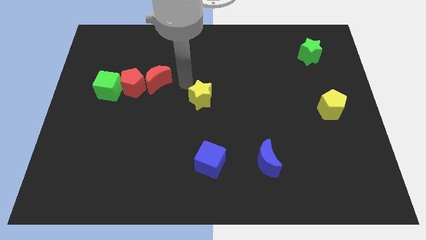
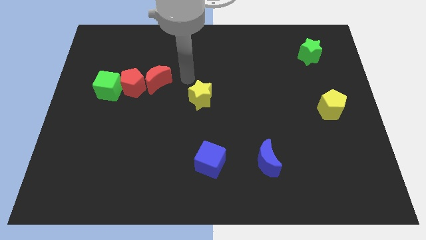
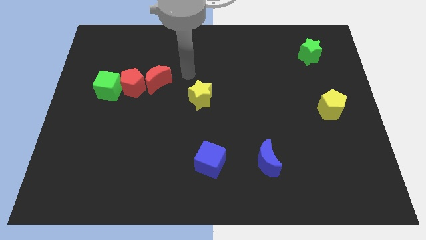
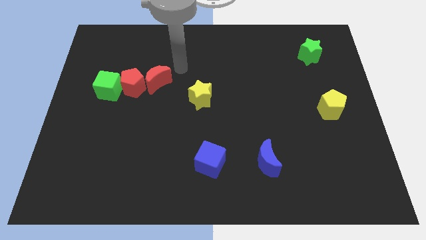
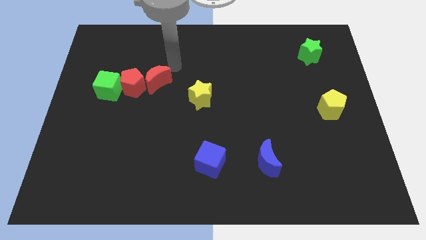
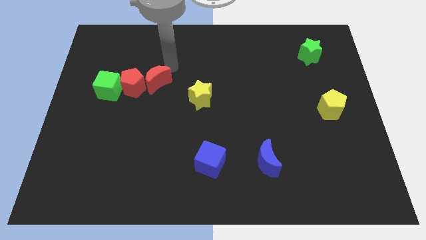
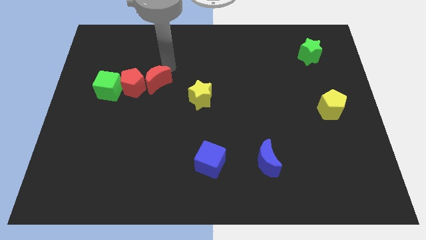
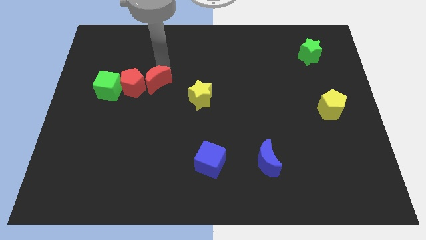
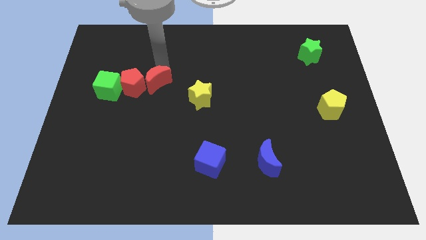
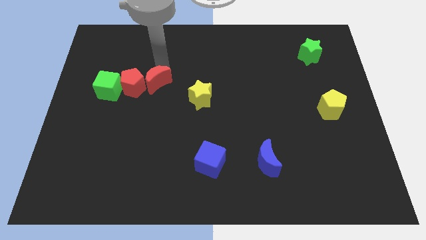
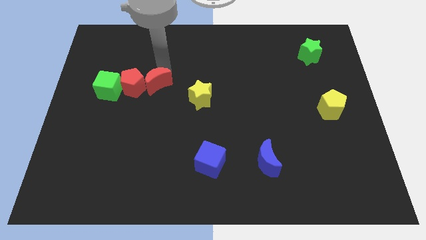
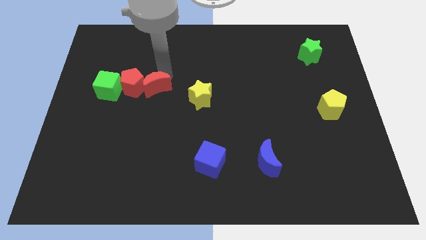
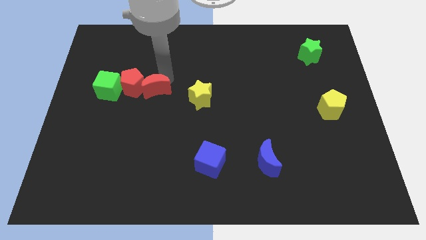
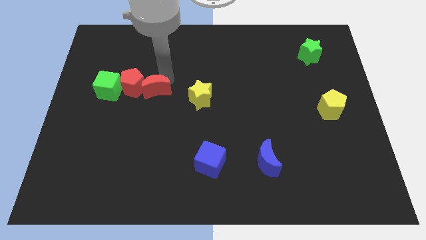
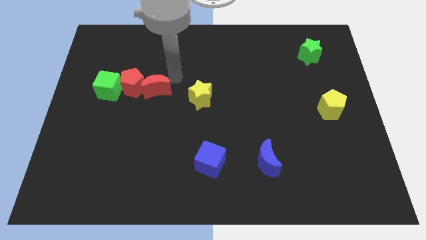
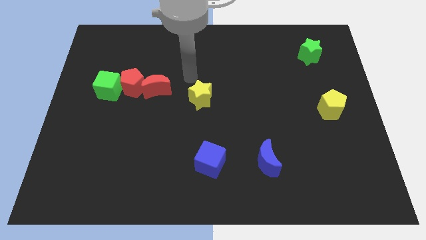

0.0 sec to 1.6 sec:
slightly push the red moon to the down

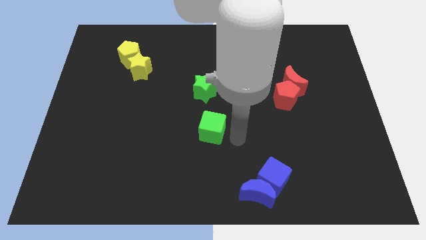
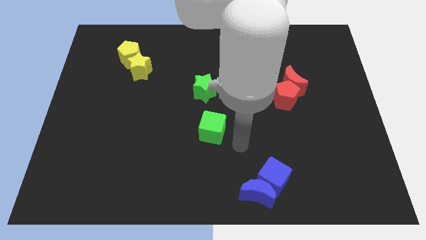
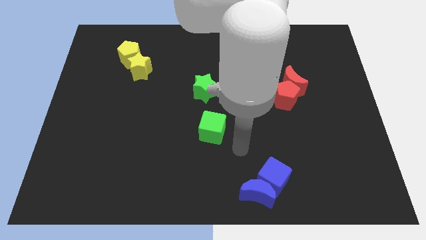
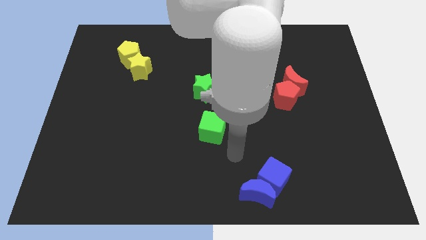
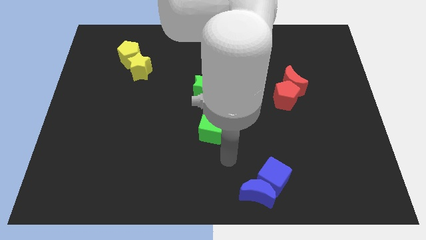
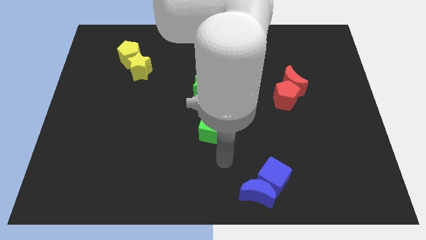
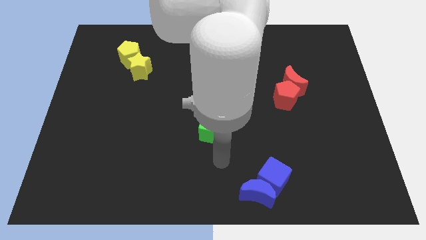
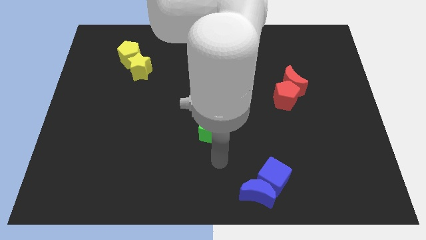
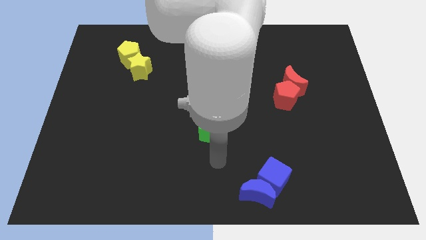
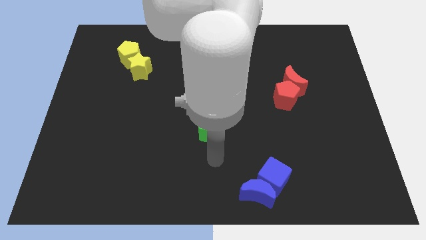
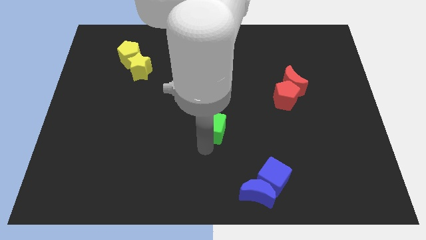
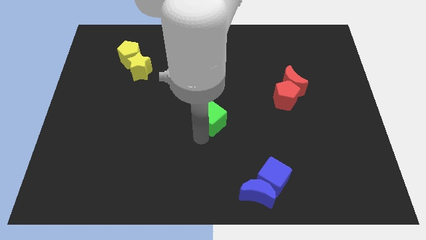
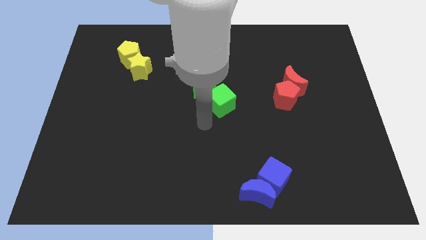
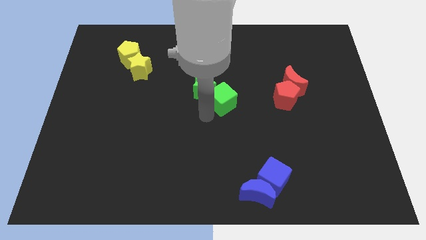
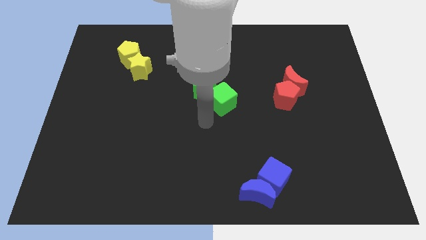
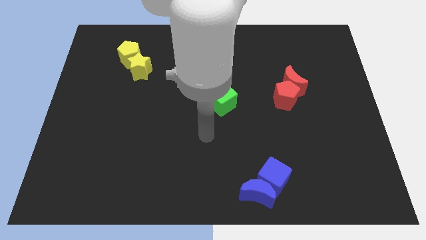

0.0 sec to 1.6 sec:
place the green cube at the center of the board

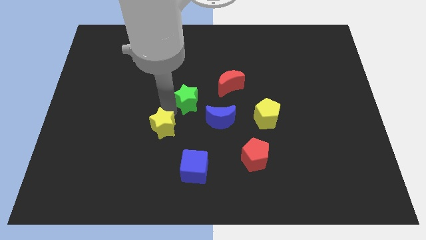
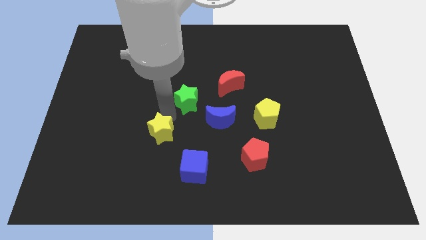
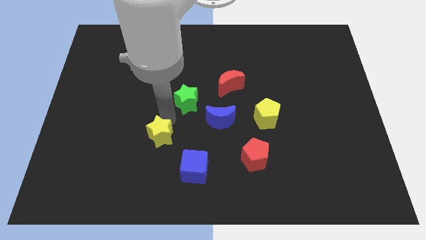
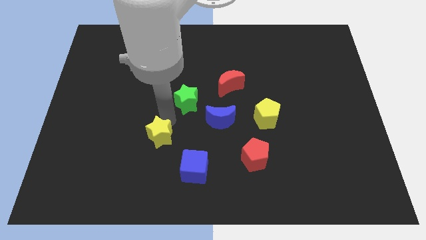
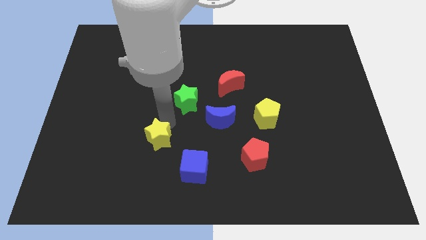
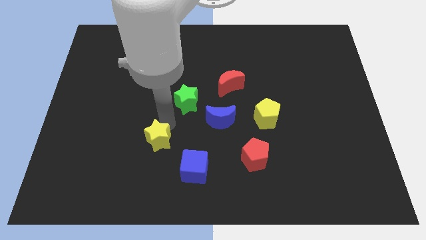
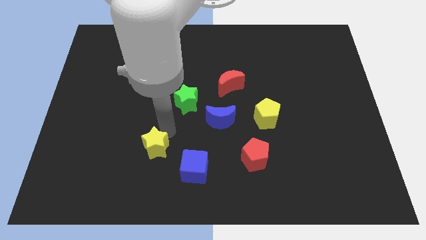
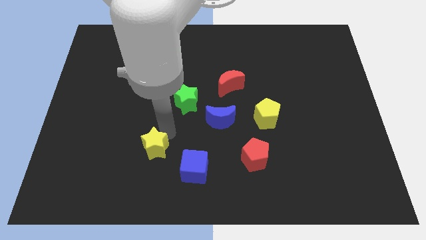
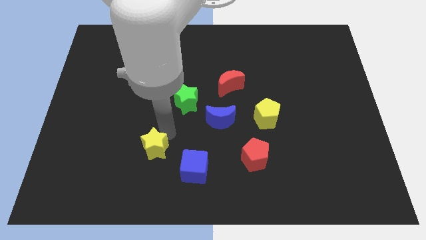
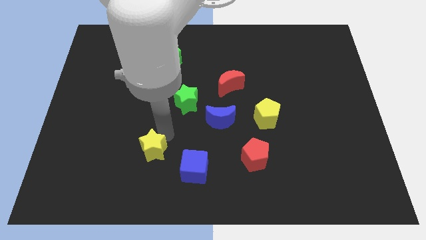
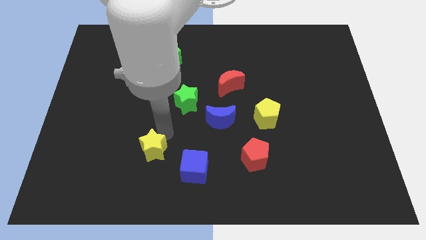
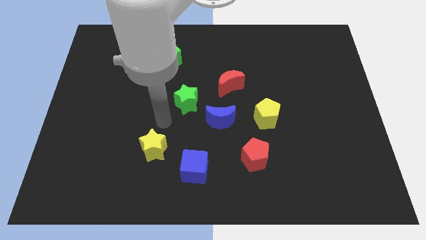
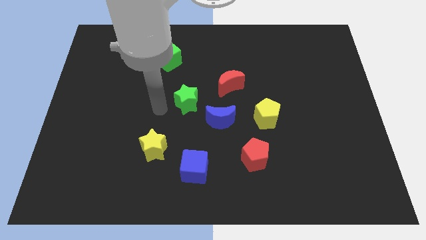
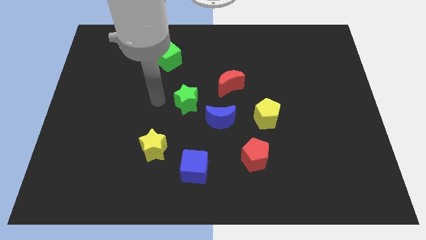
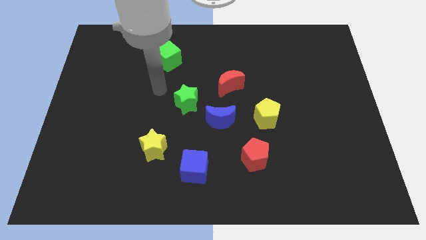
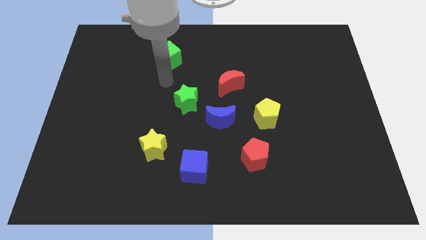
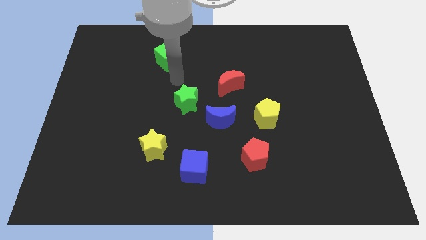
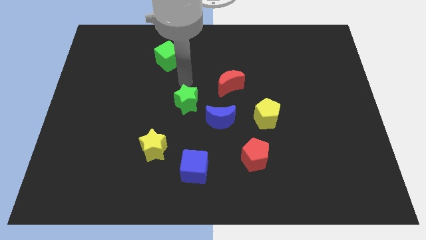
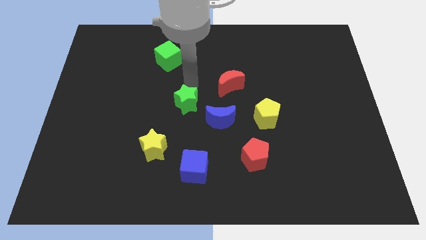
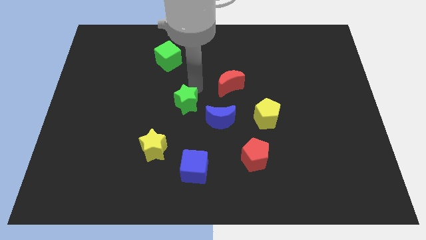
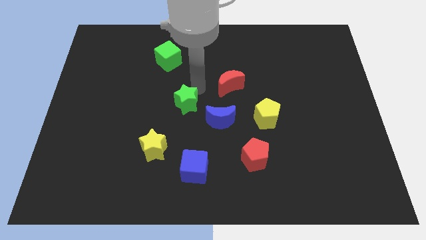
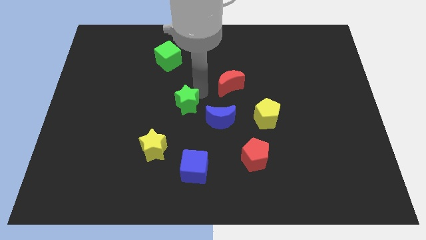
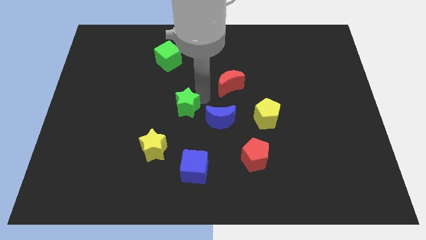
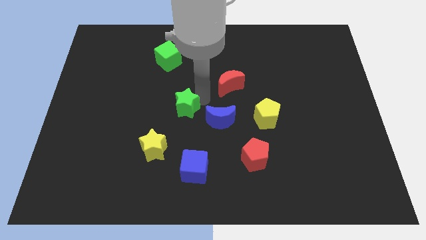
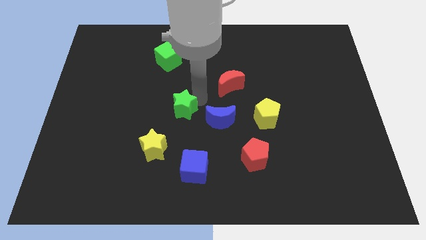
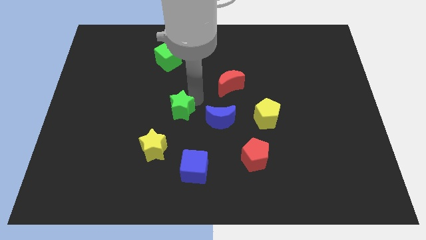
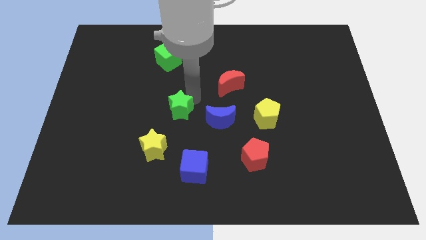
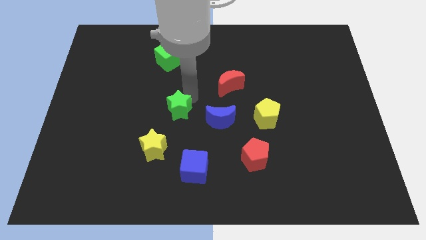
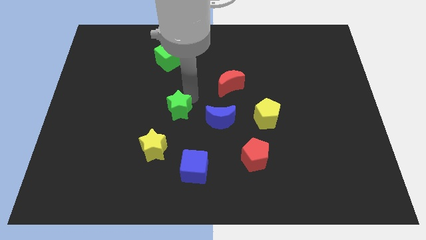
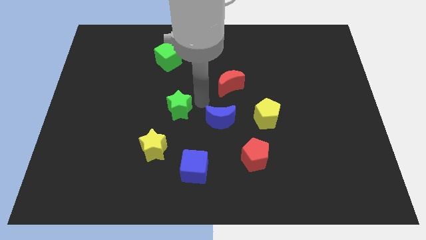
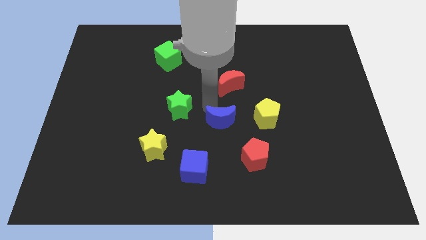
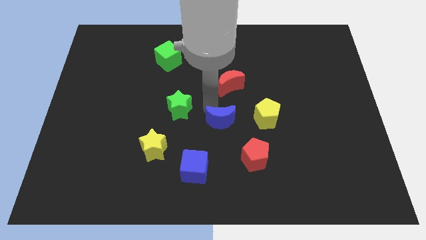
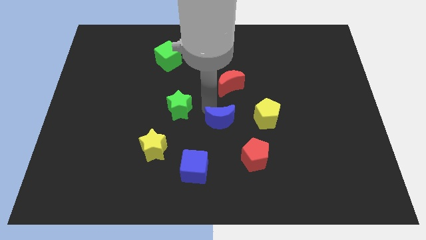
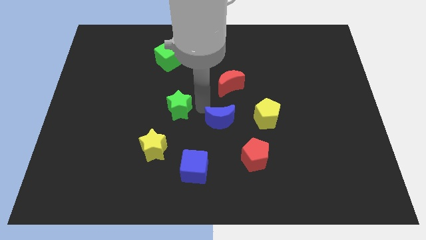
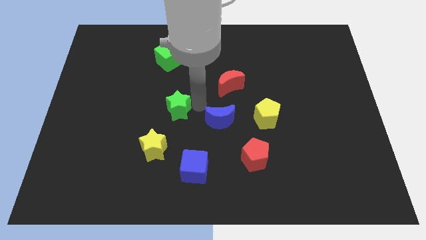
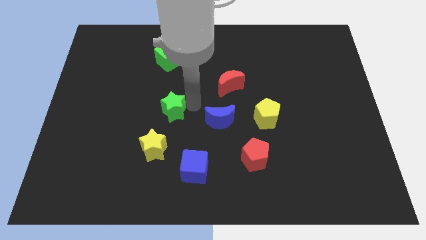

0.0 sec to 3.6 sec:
place the yellow star towards the top left side of the blue cube

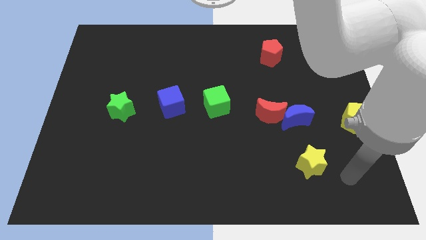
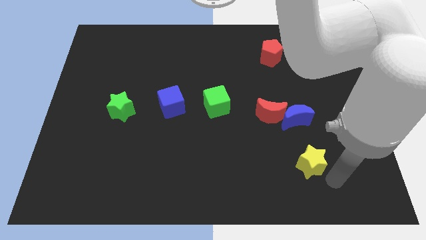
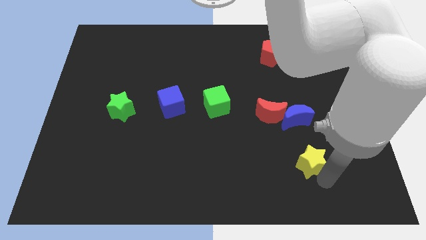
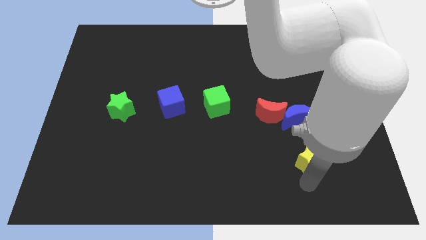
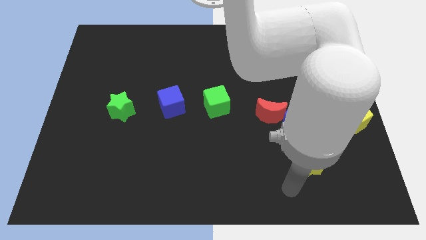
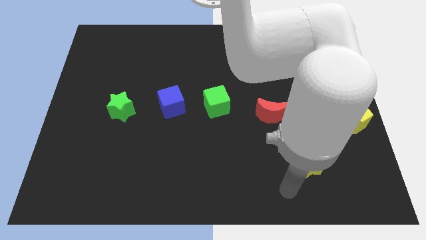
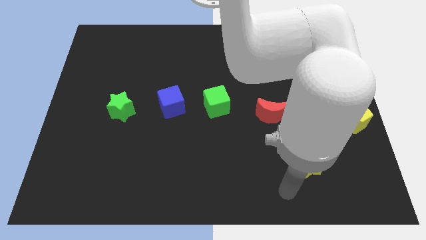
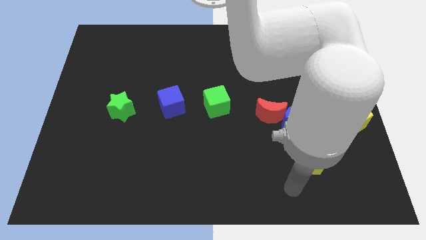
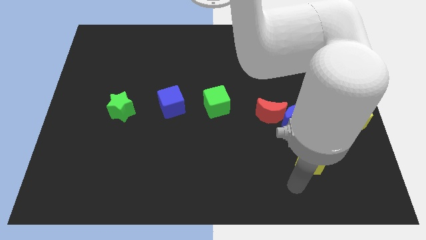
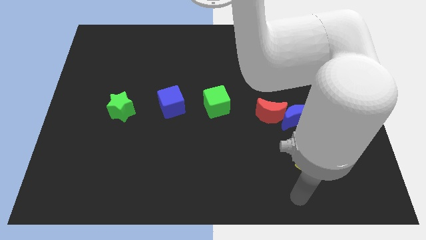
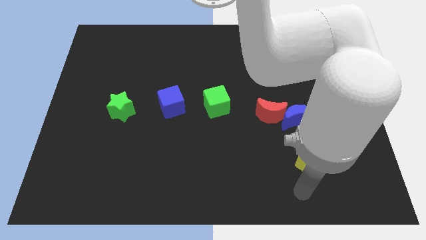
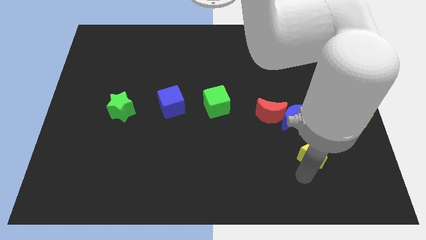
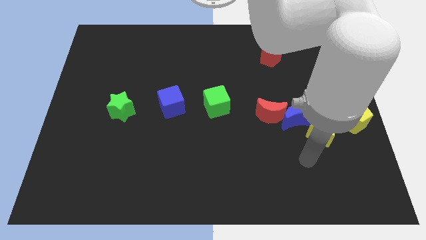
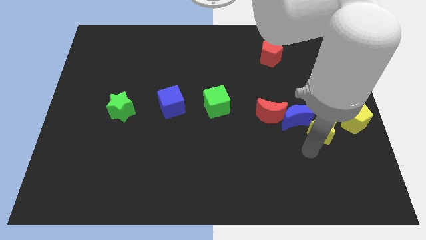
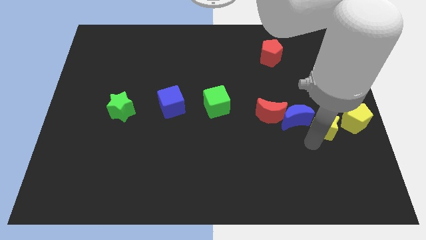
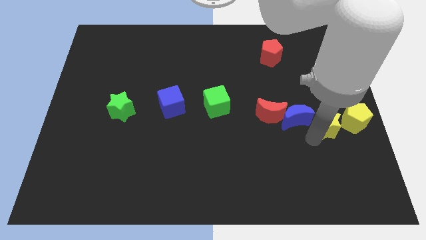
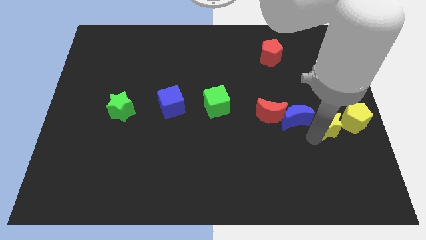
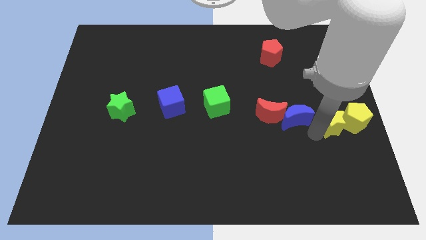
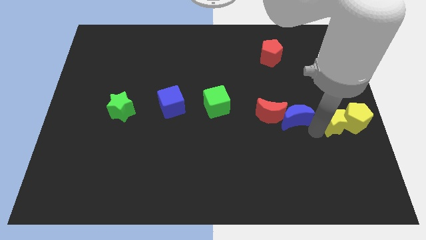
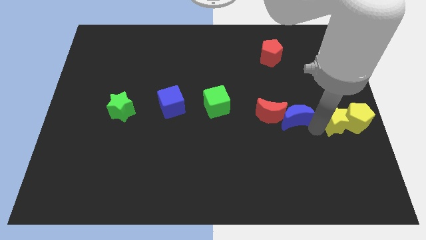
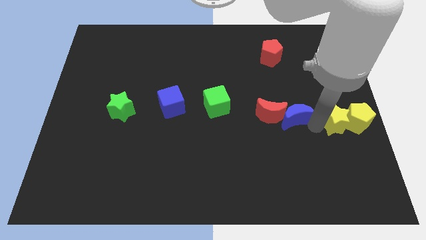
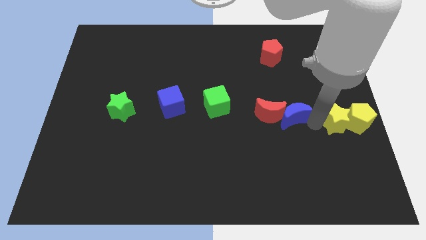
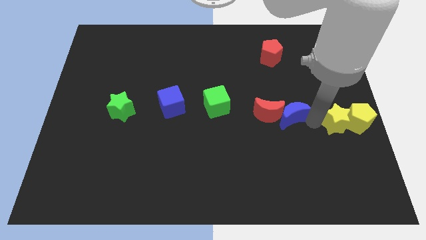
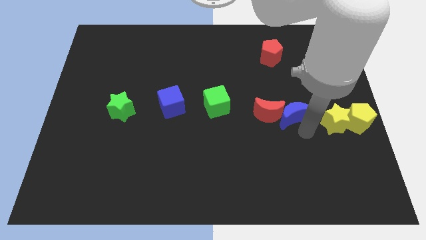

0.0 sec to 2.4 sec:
place the yellow star left of the yellow pentagon
